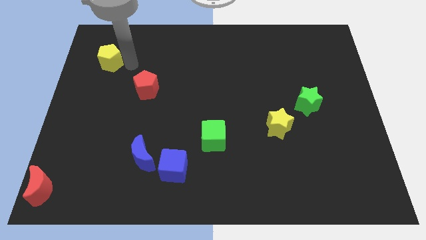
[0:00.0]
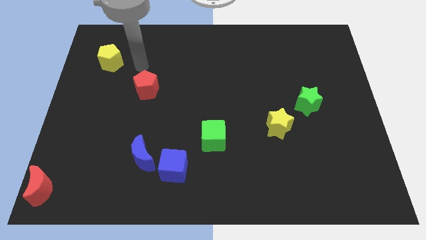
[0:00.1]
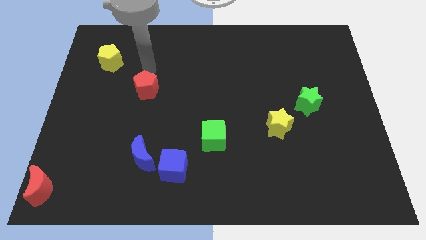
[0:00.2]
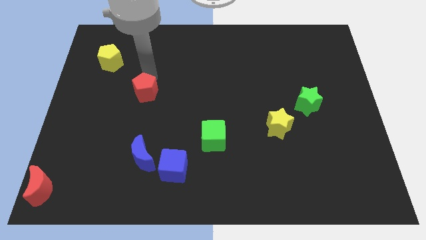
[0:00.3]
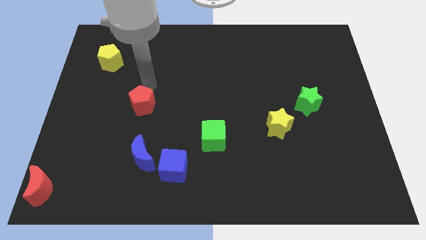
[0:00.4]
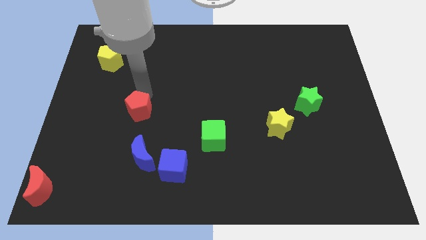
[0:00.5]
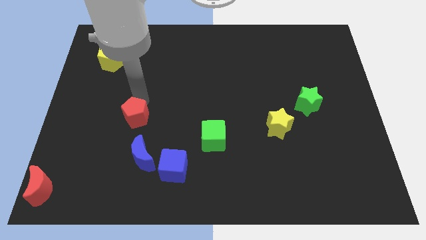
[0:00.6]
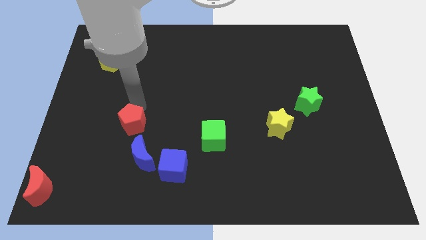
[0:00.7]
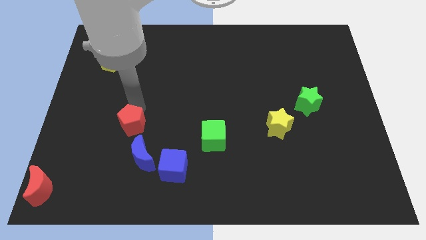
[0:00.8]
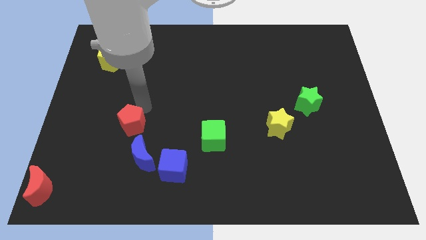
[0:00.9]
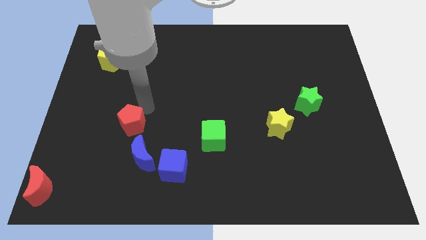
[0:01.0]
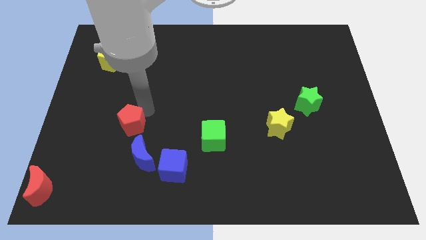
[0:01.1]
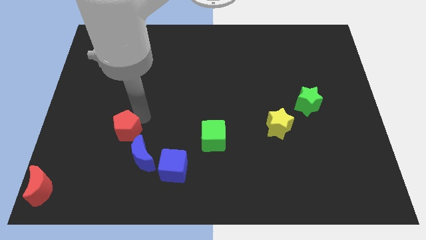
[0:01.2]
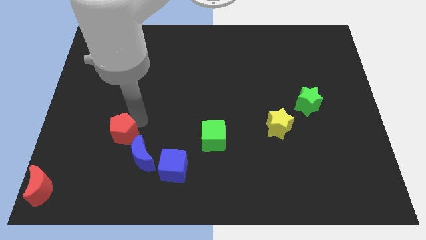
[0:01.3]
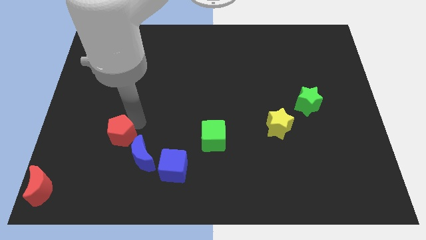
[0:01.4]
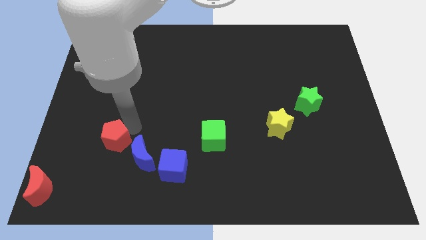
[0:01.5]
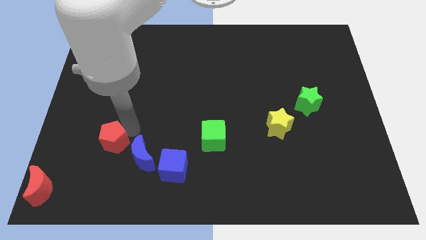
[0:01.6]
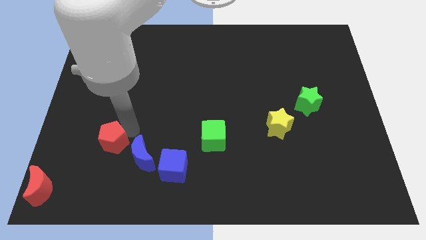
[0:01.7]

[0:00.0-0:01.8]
move the red pentagon towards the red crescent

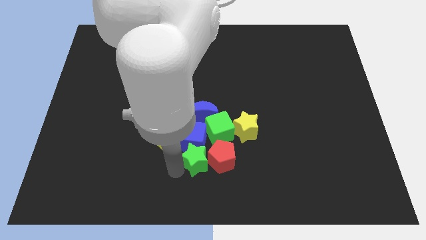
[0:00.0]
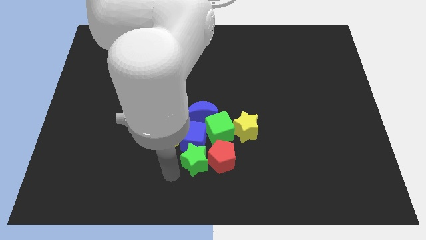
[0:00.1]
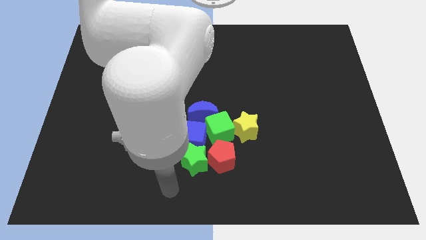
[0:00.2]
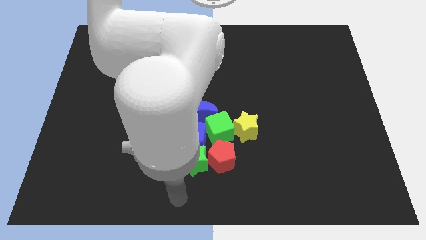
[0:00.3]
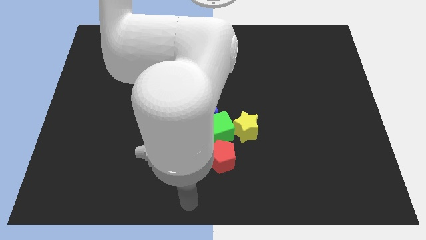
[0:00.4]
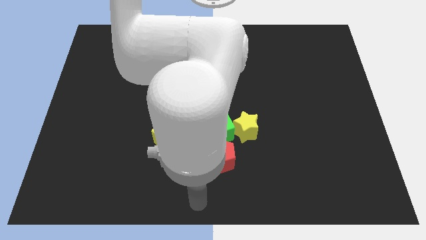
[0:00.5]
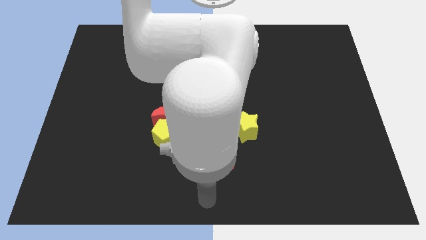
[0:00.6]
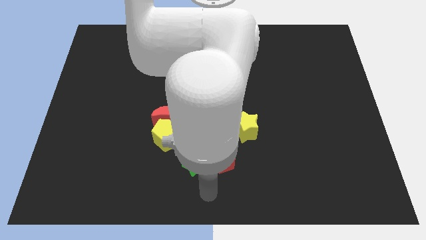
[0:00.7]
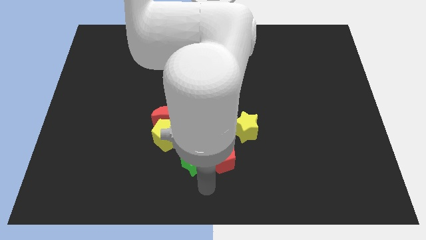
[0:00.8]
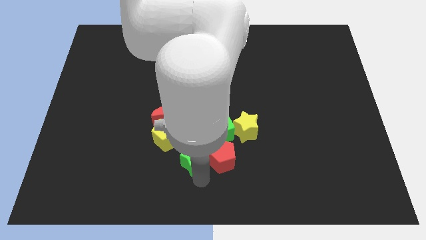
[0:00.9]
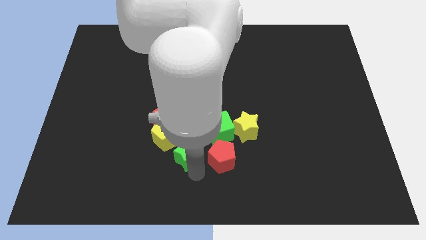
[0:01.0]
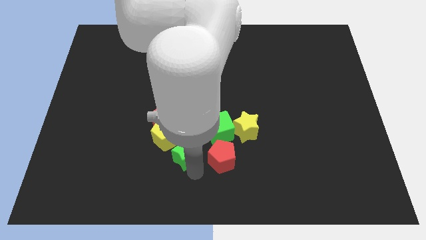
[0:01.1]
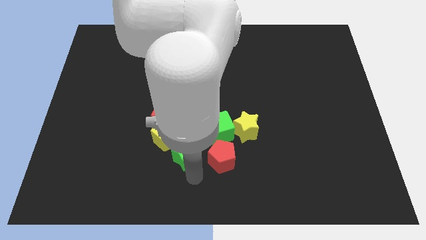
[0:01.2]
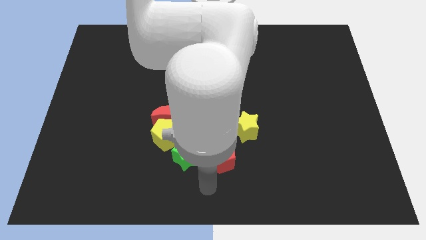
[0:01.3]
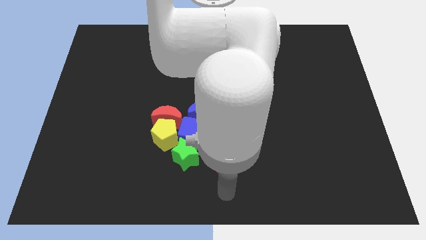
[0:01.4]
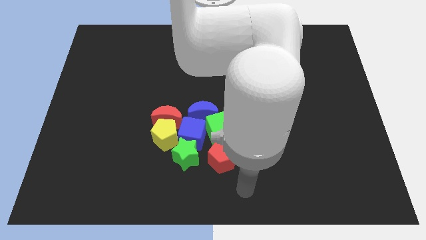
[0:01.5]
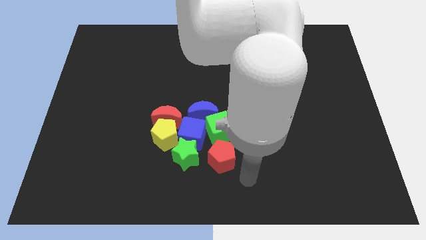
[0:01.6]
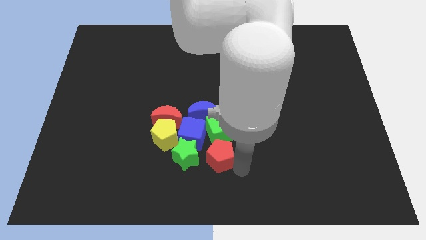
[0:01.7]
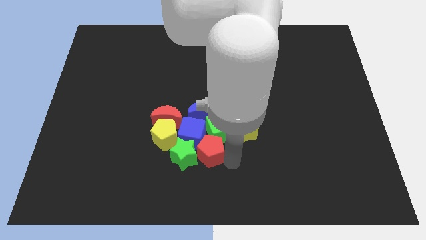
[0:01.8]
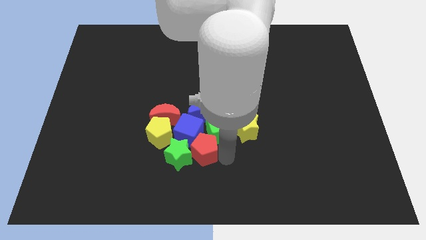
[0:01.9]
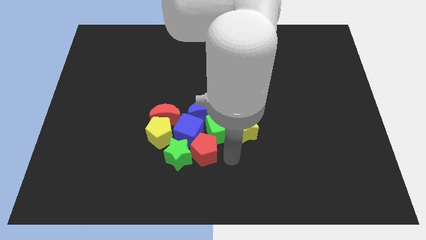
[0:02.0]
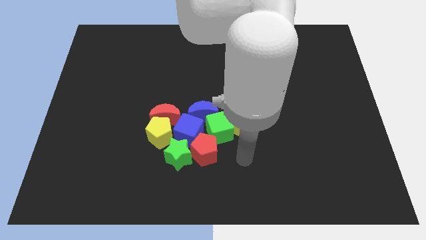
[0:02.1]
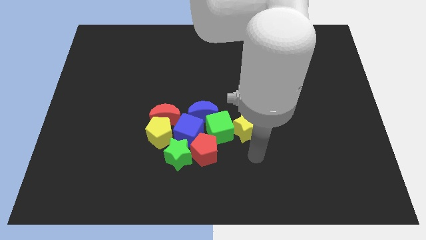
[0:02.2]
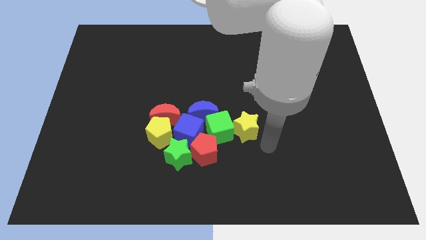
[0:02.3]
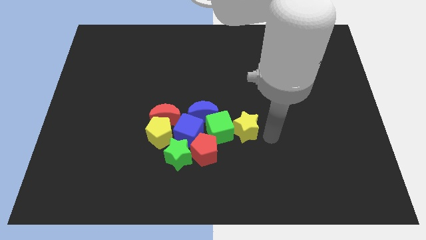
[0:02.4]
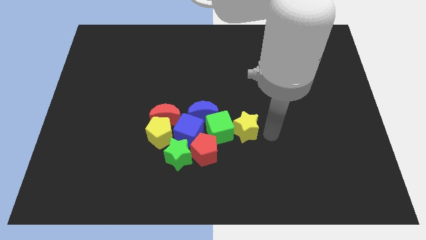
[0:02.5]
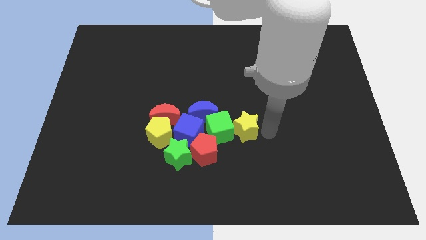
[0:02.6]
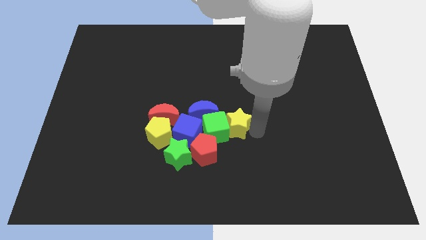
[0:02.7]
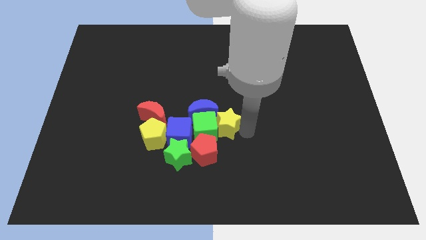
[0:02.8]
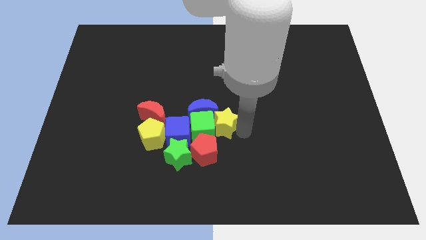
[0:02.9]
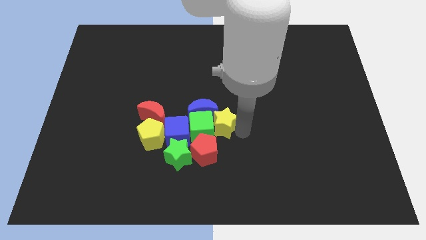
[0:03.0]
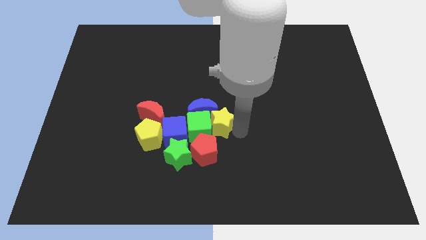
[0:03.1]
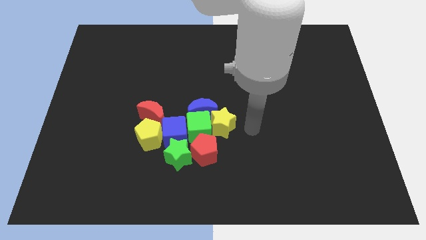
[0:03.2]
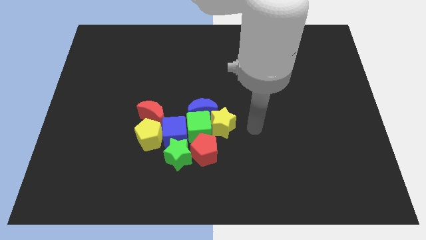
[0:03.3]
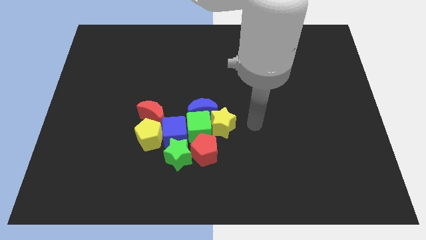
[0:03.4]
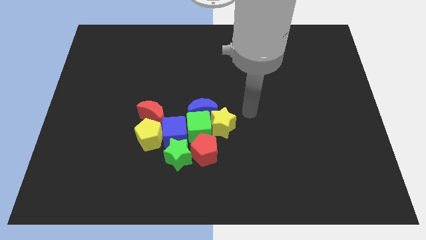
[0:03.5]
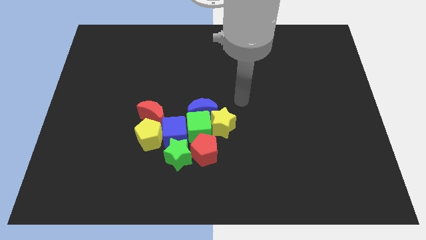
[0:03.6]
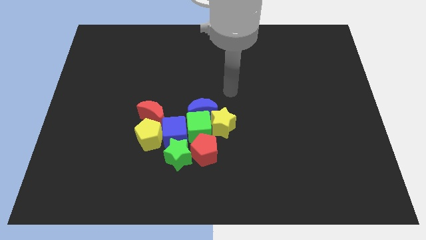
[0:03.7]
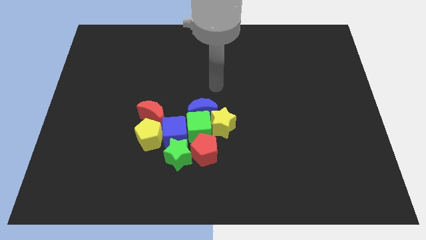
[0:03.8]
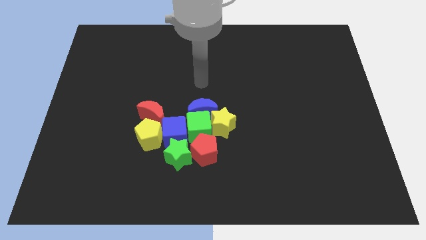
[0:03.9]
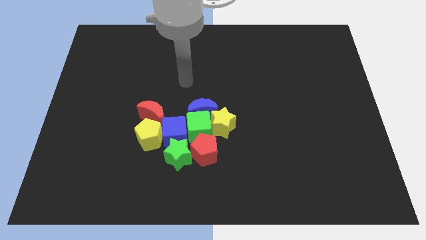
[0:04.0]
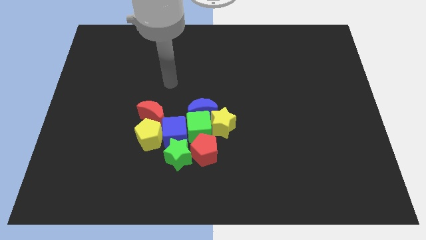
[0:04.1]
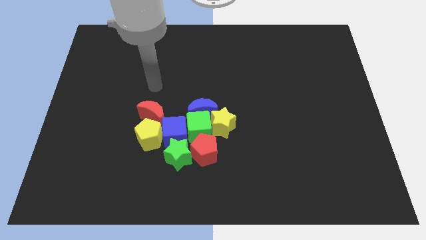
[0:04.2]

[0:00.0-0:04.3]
push the group of blocks to the left side of the table

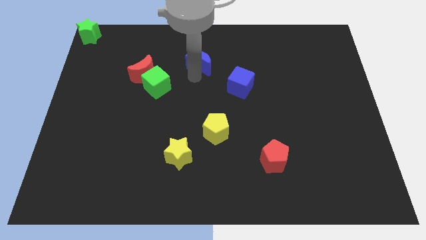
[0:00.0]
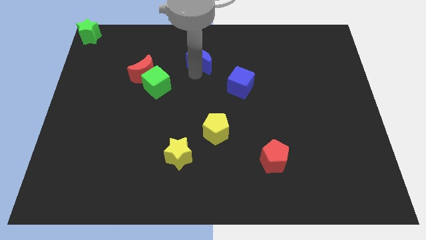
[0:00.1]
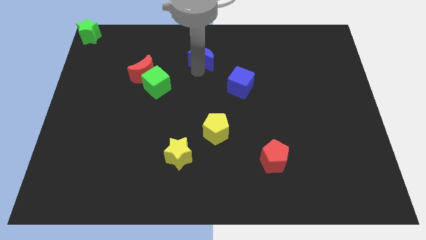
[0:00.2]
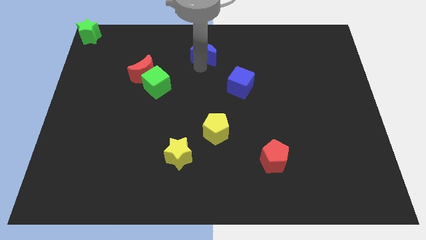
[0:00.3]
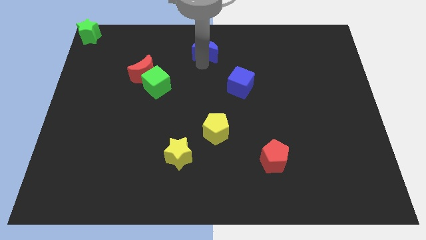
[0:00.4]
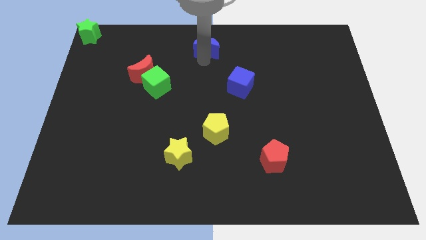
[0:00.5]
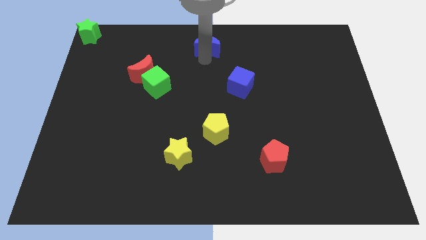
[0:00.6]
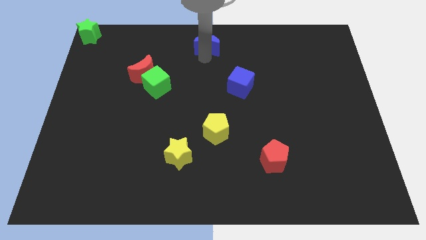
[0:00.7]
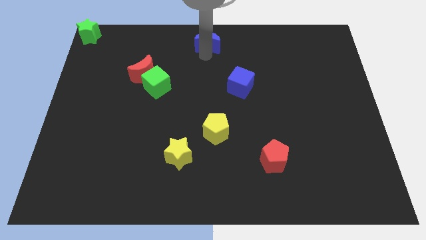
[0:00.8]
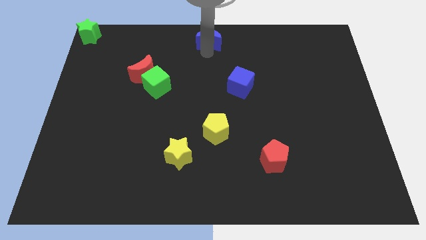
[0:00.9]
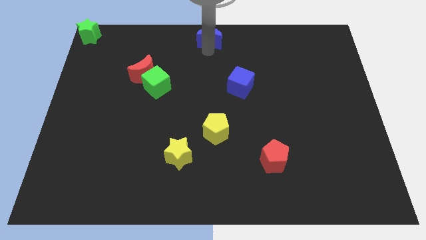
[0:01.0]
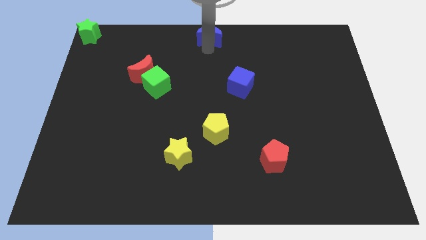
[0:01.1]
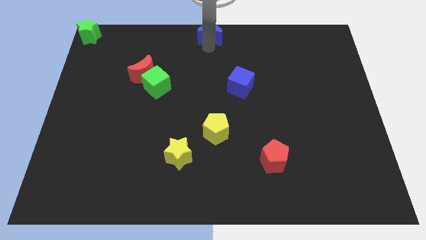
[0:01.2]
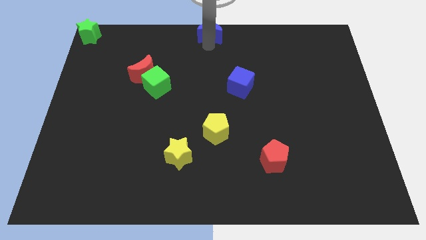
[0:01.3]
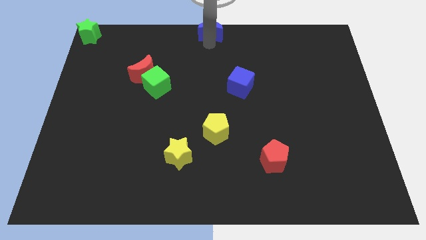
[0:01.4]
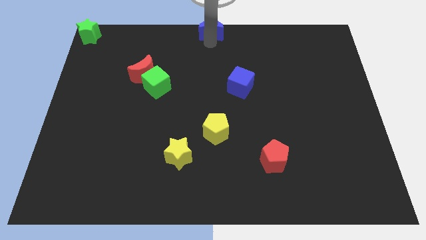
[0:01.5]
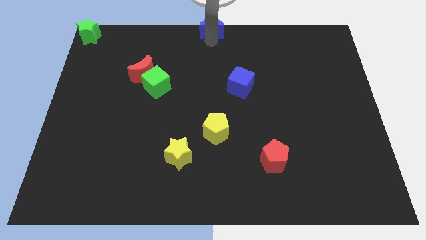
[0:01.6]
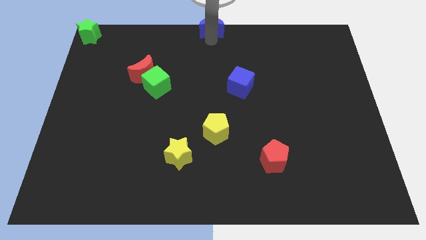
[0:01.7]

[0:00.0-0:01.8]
push the blue crescent to the top center of the board

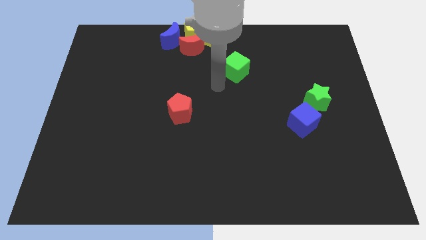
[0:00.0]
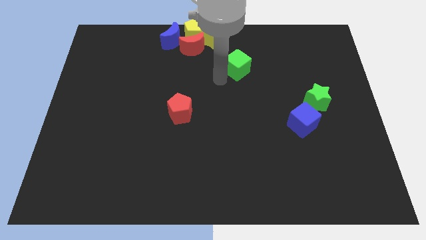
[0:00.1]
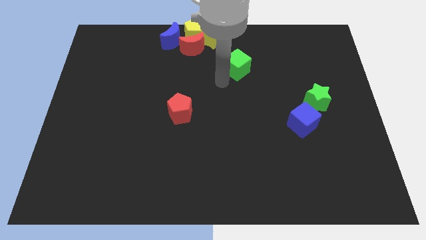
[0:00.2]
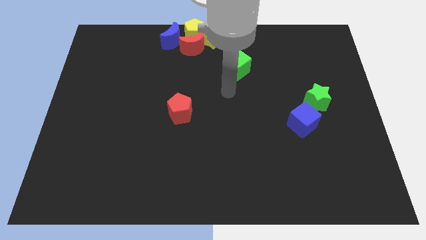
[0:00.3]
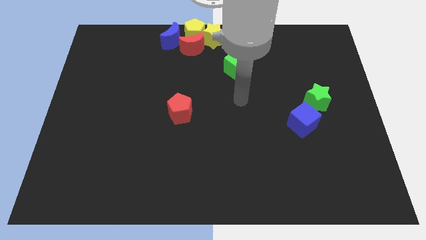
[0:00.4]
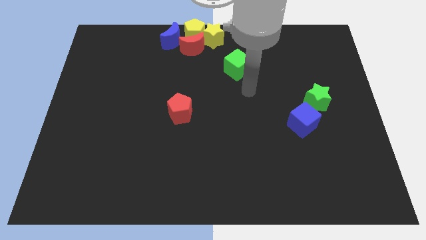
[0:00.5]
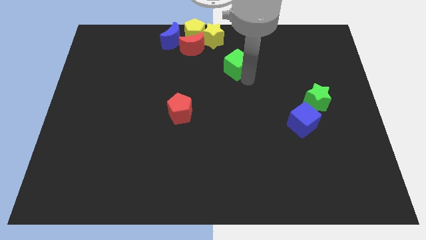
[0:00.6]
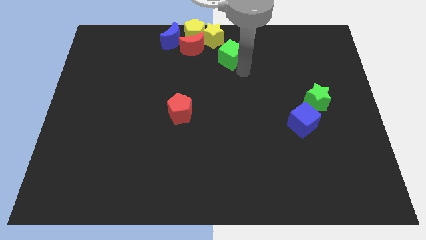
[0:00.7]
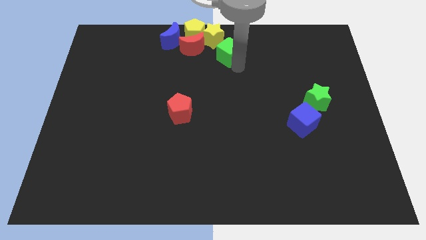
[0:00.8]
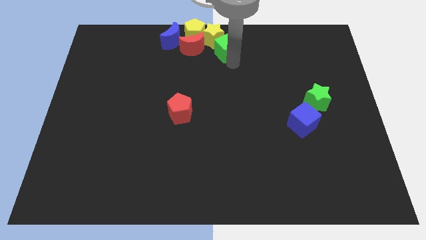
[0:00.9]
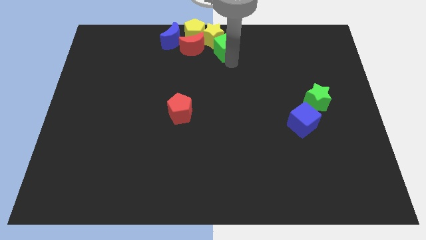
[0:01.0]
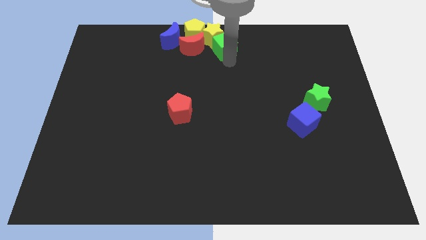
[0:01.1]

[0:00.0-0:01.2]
move green cube into group of blocks
